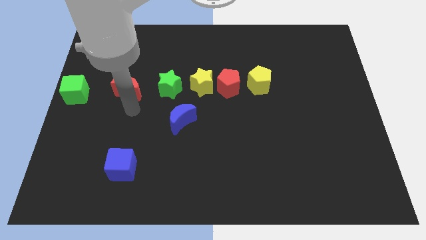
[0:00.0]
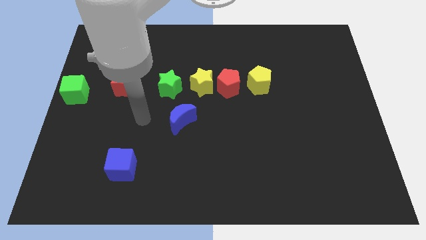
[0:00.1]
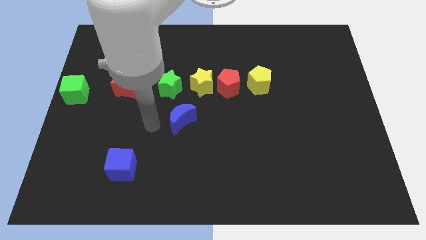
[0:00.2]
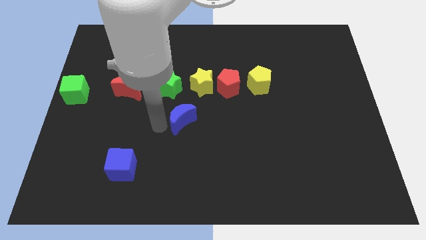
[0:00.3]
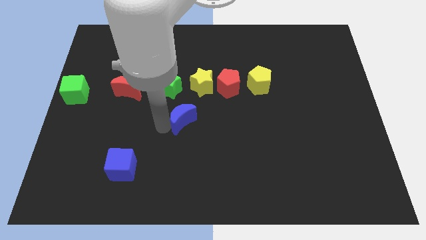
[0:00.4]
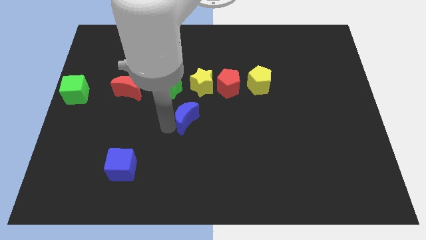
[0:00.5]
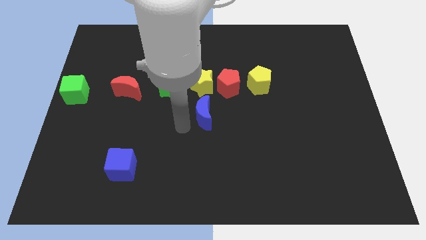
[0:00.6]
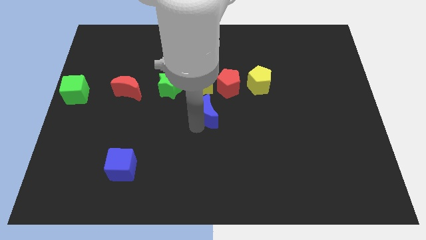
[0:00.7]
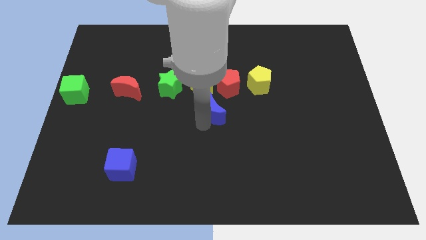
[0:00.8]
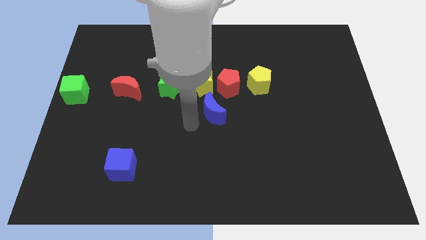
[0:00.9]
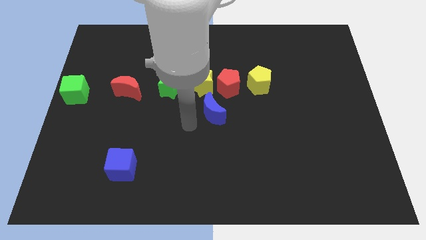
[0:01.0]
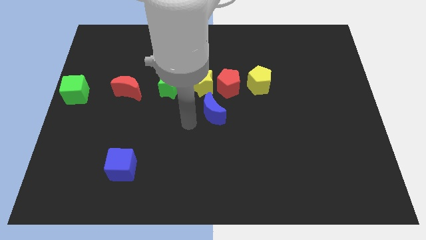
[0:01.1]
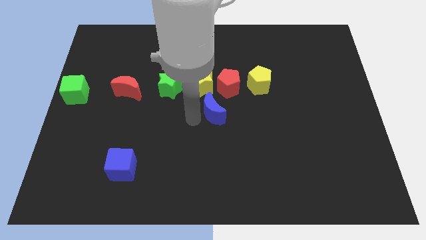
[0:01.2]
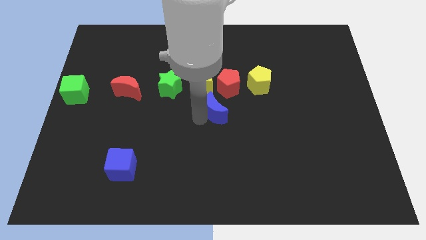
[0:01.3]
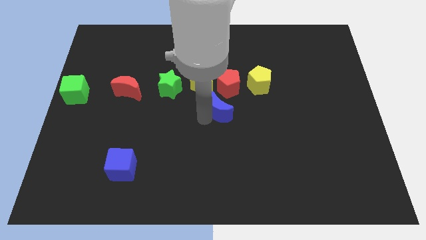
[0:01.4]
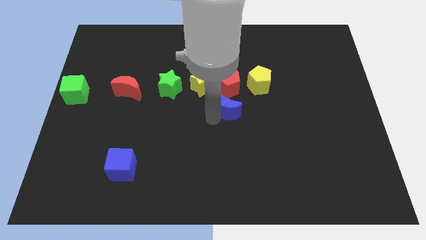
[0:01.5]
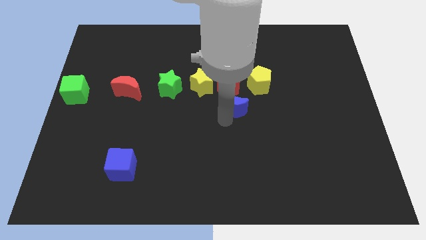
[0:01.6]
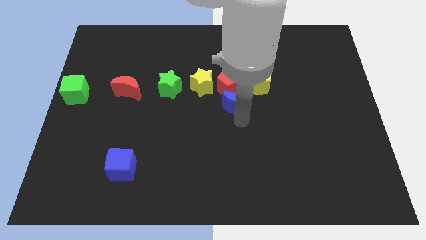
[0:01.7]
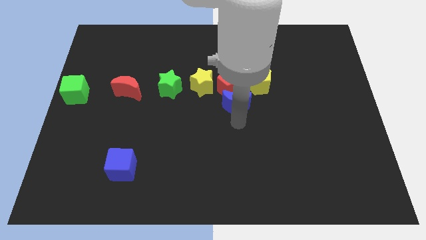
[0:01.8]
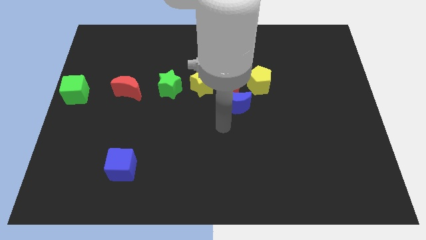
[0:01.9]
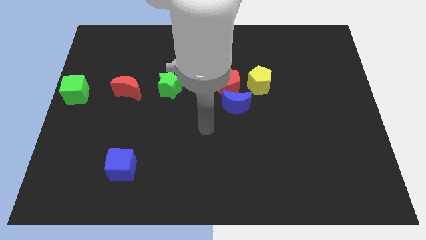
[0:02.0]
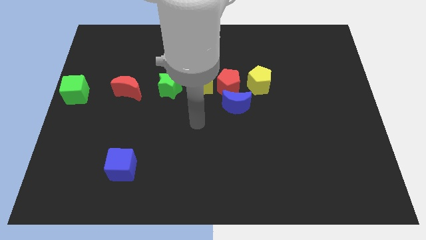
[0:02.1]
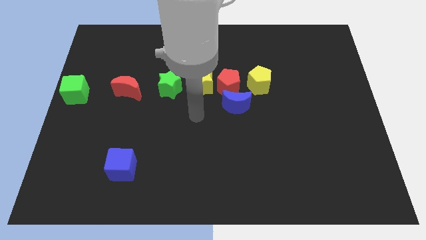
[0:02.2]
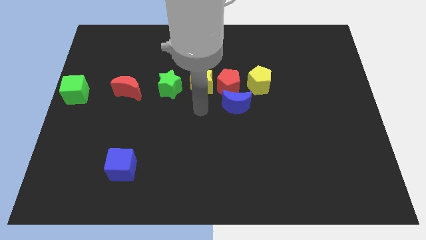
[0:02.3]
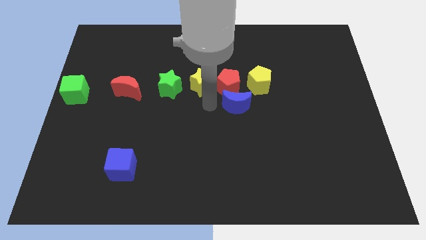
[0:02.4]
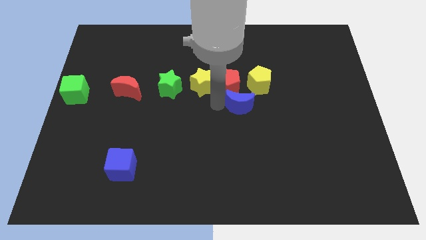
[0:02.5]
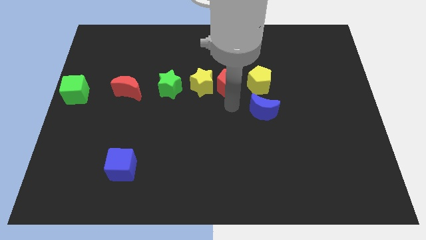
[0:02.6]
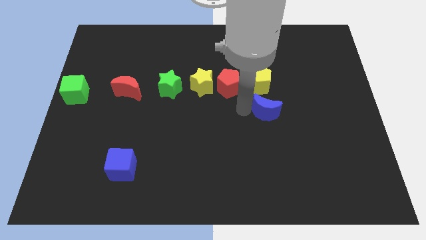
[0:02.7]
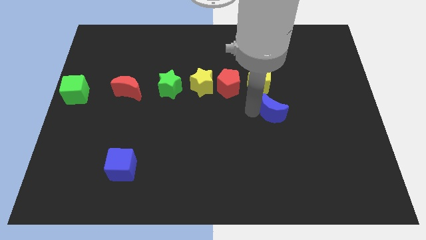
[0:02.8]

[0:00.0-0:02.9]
place the blue crescent below the yellow pentagon

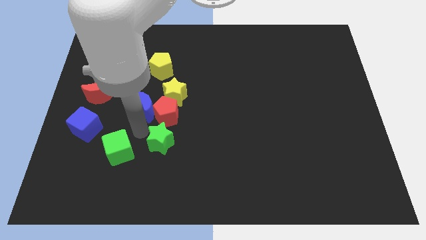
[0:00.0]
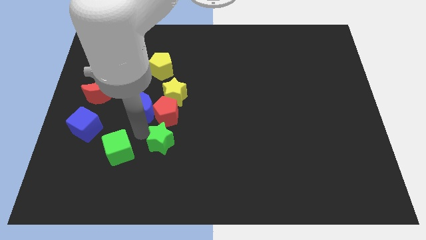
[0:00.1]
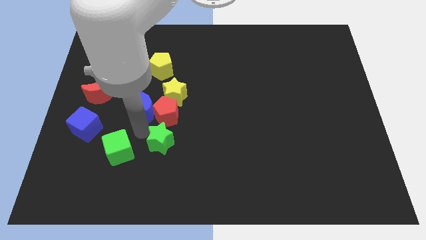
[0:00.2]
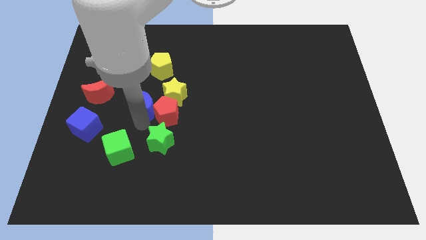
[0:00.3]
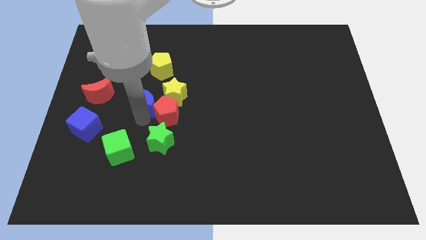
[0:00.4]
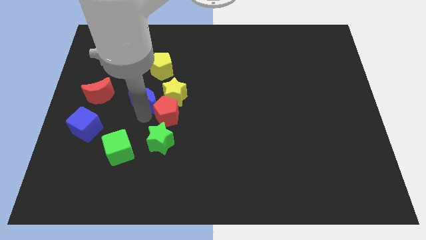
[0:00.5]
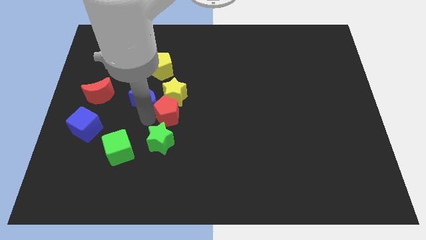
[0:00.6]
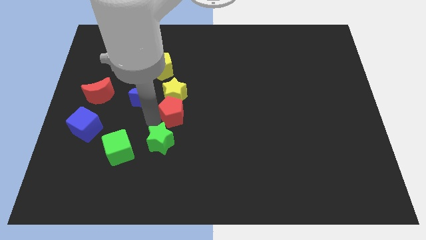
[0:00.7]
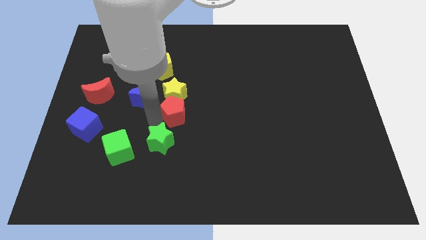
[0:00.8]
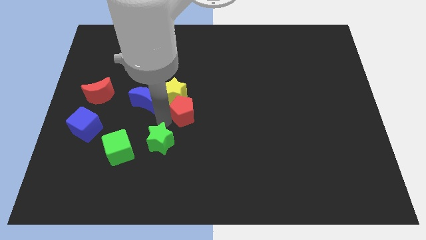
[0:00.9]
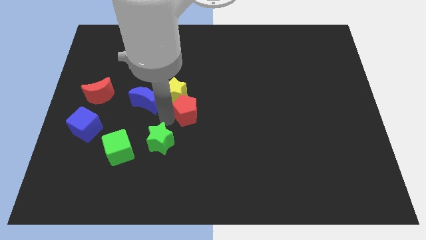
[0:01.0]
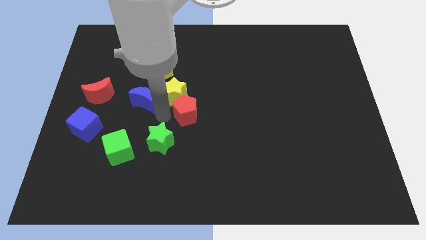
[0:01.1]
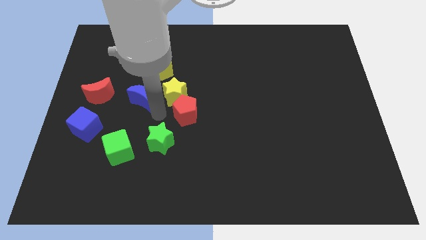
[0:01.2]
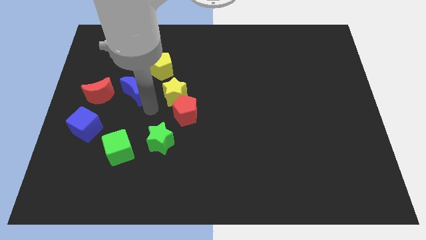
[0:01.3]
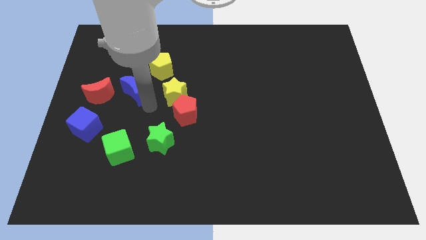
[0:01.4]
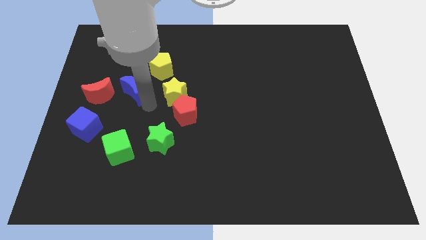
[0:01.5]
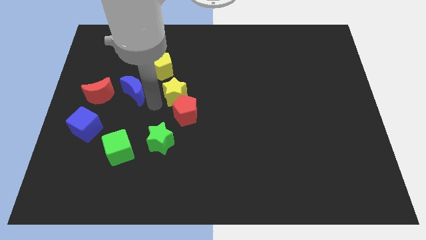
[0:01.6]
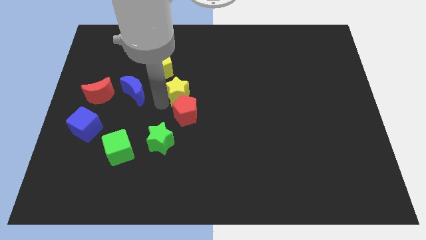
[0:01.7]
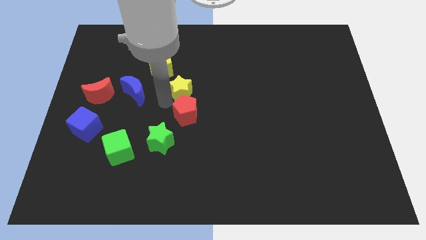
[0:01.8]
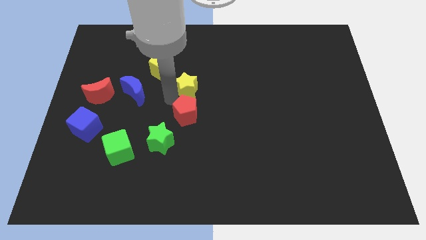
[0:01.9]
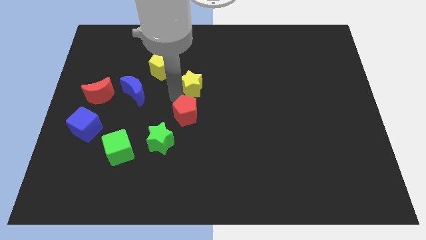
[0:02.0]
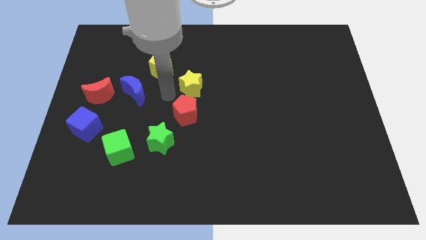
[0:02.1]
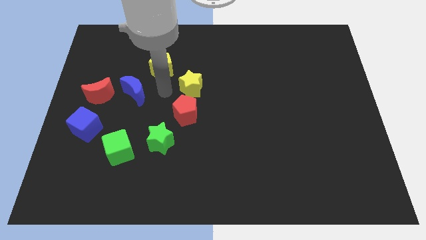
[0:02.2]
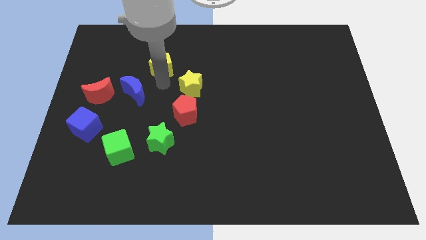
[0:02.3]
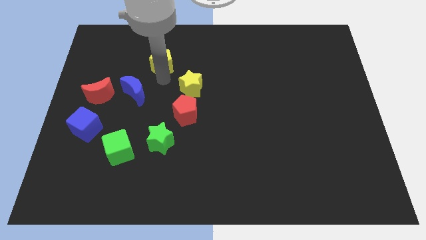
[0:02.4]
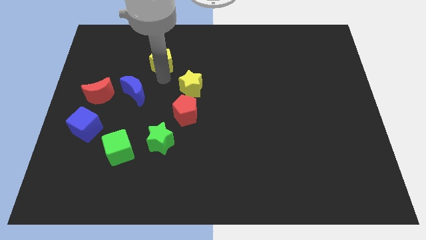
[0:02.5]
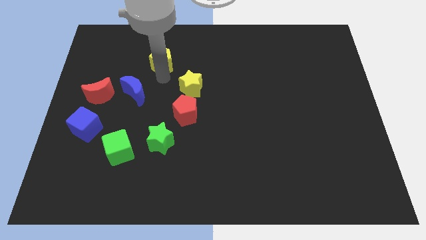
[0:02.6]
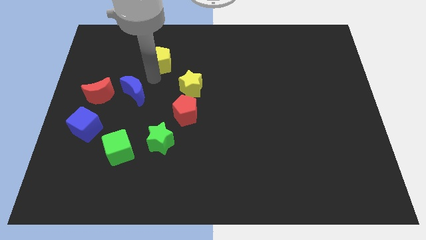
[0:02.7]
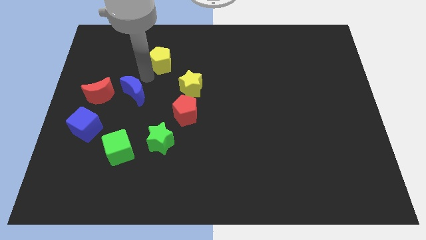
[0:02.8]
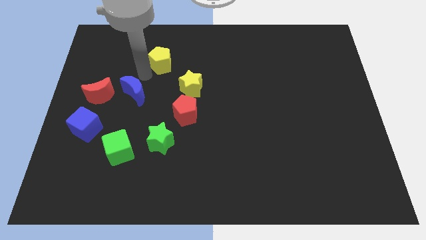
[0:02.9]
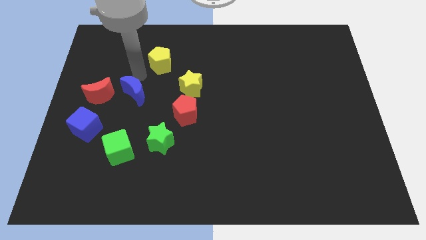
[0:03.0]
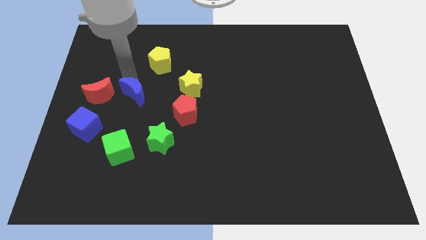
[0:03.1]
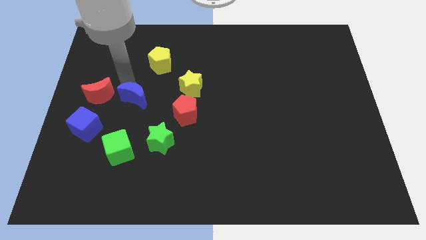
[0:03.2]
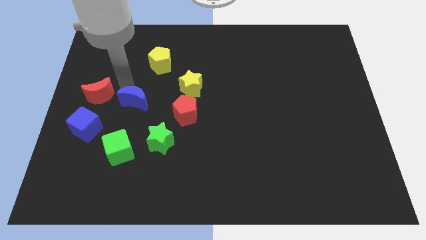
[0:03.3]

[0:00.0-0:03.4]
turn blue crescent towards down

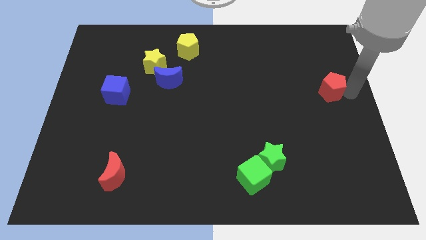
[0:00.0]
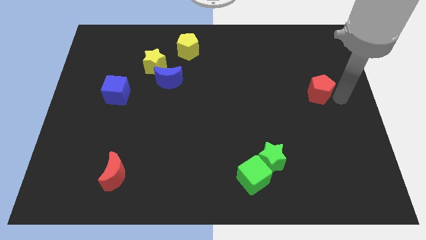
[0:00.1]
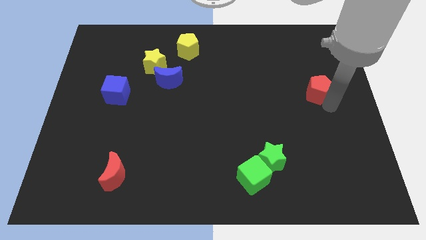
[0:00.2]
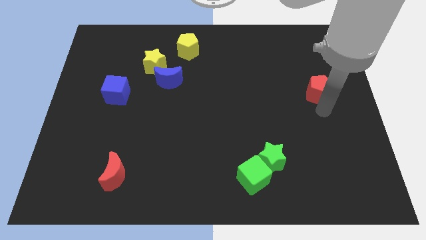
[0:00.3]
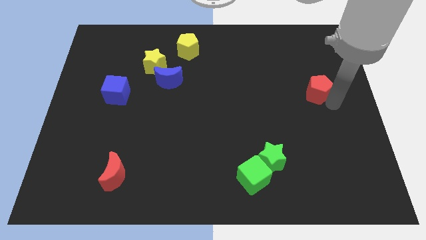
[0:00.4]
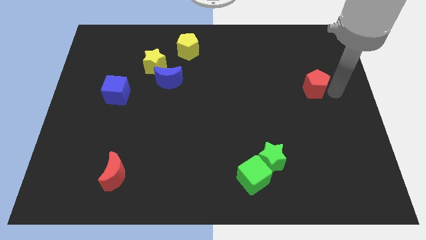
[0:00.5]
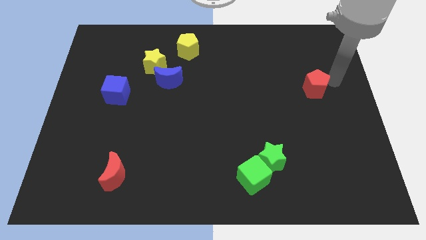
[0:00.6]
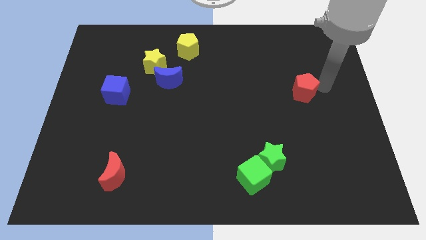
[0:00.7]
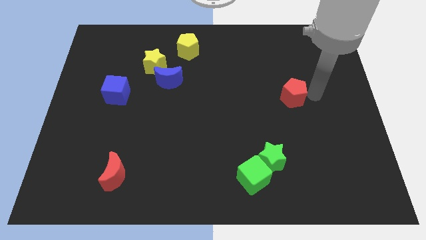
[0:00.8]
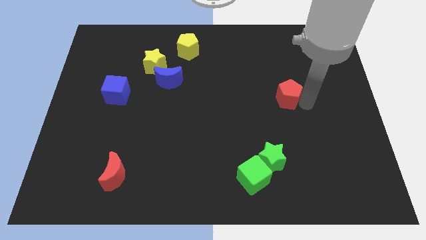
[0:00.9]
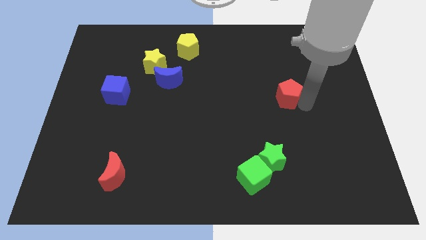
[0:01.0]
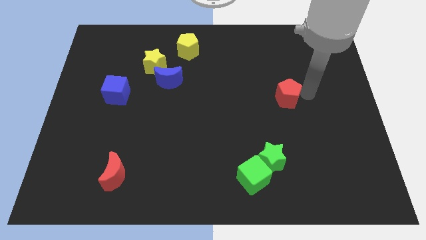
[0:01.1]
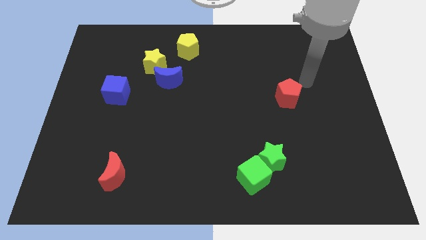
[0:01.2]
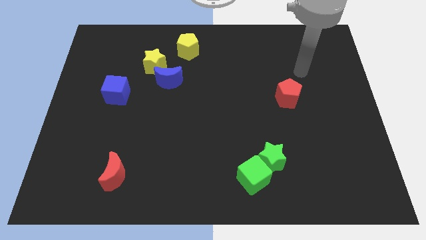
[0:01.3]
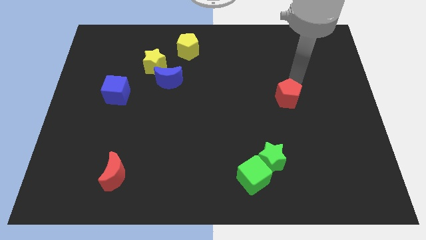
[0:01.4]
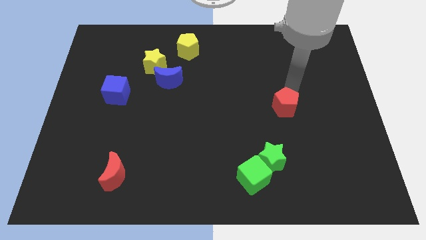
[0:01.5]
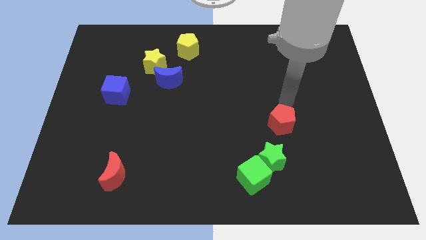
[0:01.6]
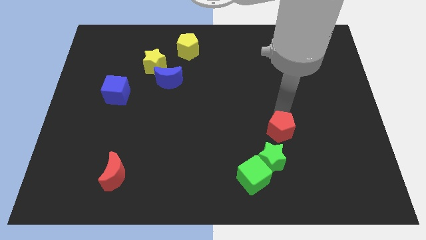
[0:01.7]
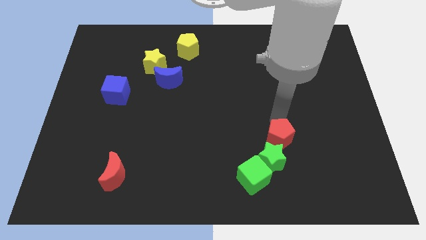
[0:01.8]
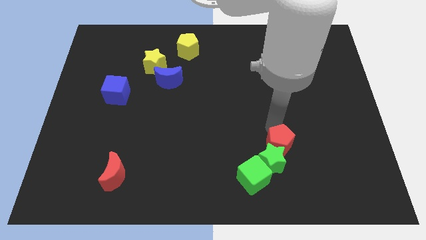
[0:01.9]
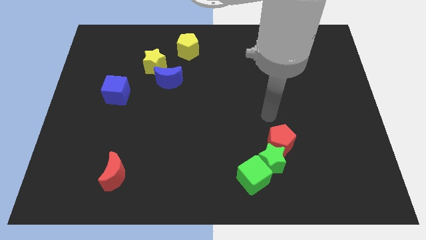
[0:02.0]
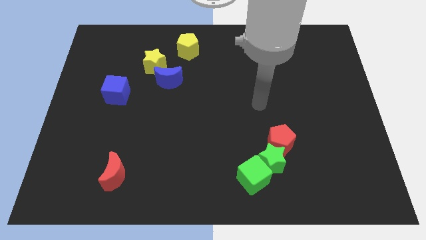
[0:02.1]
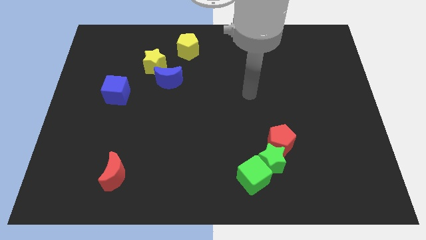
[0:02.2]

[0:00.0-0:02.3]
push the red pentagon into green star

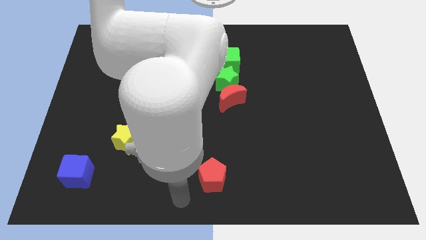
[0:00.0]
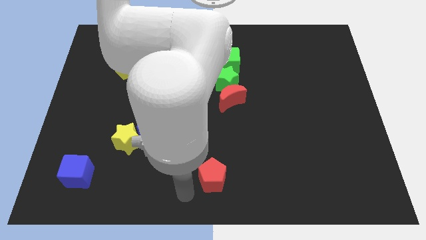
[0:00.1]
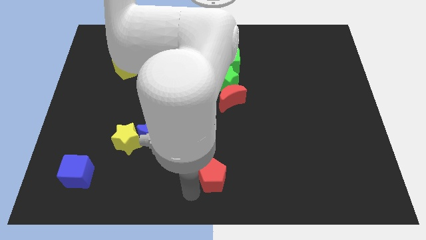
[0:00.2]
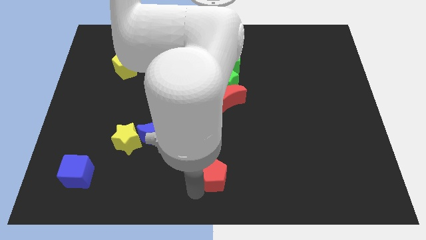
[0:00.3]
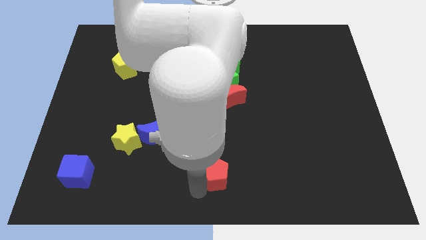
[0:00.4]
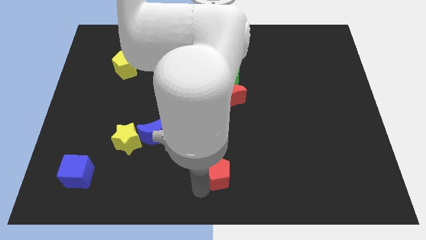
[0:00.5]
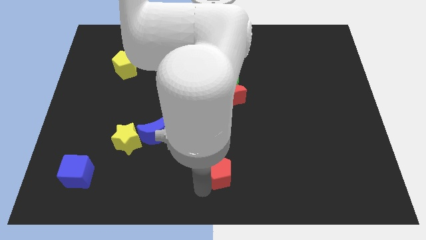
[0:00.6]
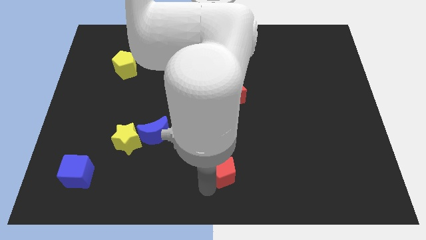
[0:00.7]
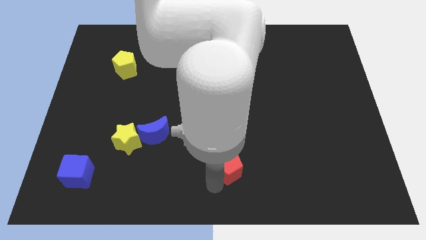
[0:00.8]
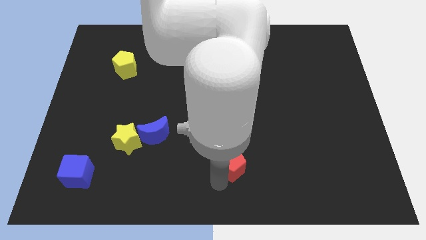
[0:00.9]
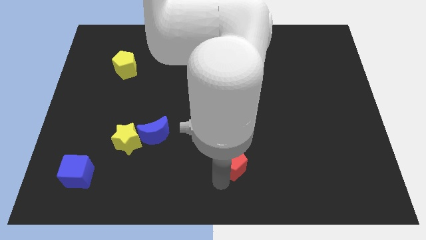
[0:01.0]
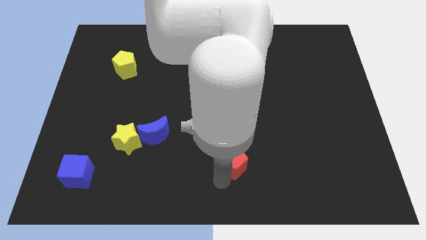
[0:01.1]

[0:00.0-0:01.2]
move the red pentagon vertically below the red moon
